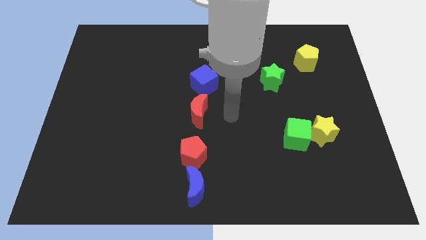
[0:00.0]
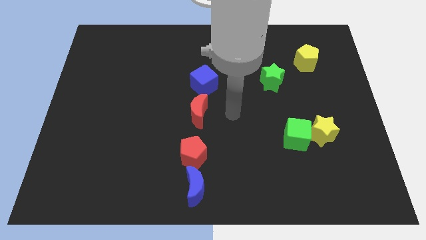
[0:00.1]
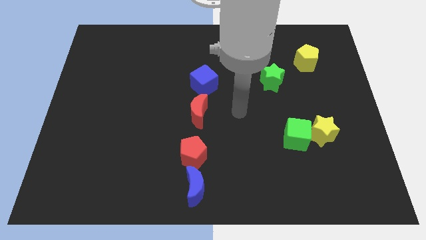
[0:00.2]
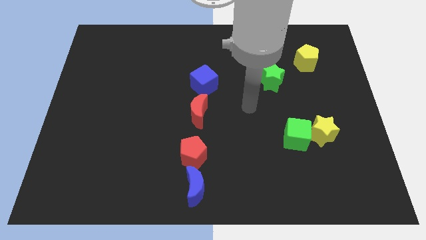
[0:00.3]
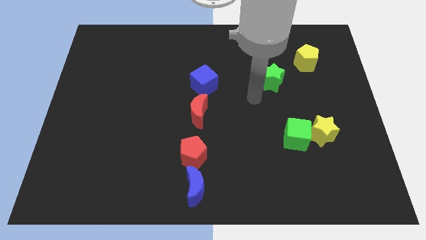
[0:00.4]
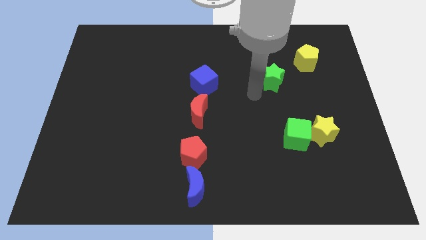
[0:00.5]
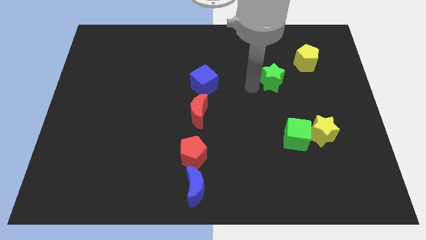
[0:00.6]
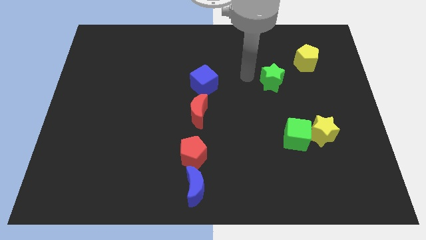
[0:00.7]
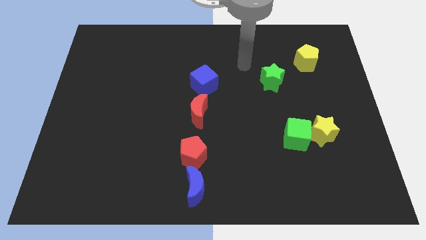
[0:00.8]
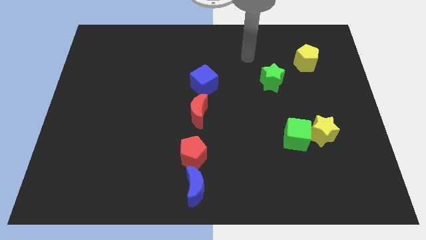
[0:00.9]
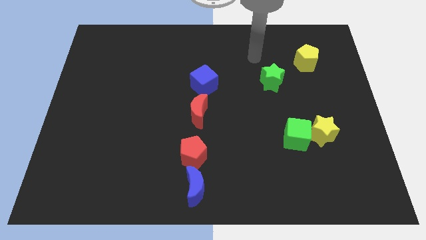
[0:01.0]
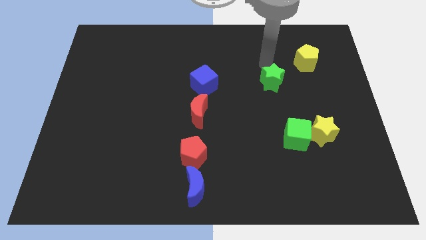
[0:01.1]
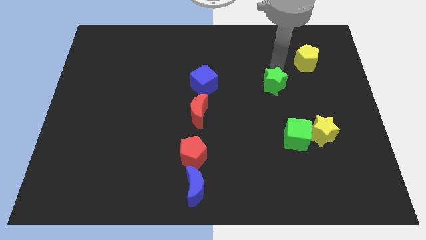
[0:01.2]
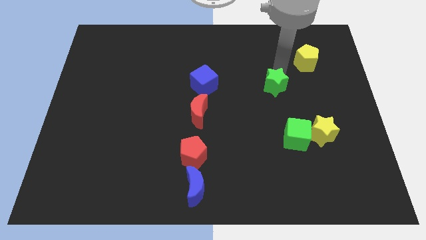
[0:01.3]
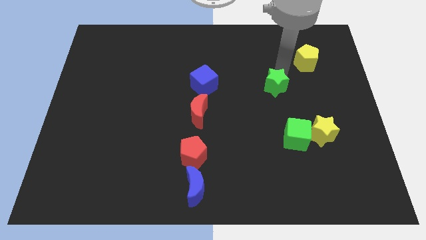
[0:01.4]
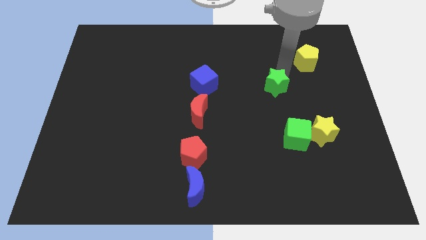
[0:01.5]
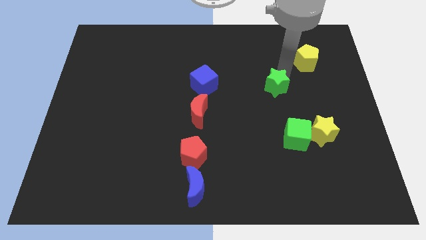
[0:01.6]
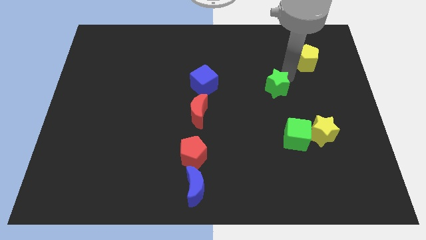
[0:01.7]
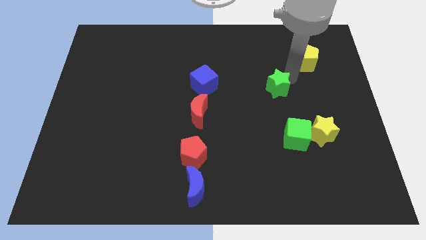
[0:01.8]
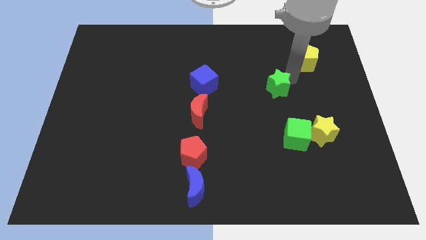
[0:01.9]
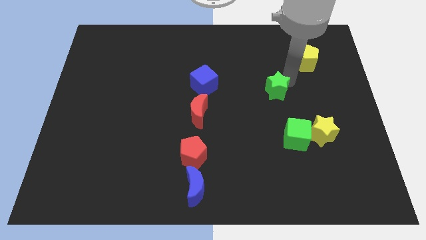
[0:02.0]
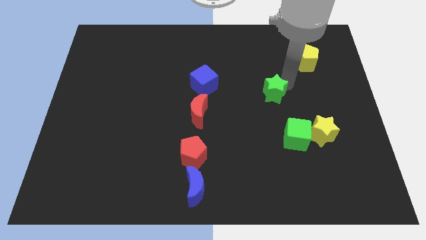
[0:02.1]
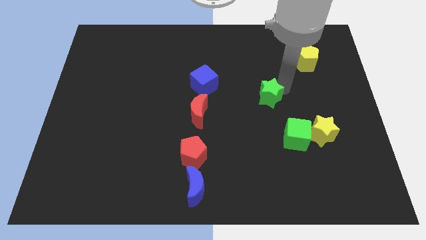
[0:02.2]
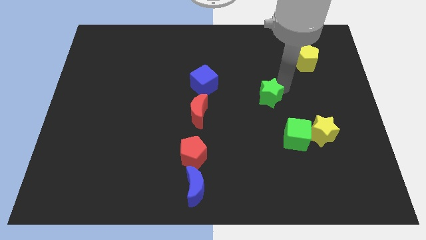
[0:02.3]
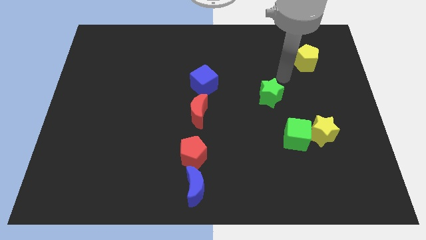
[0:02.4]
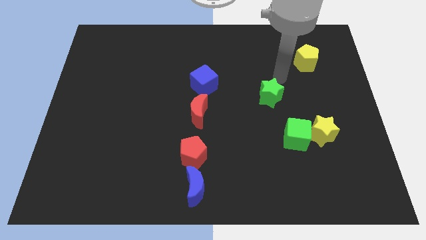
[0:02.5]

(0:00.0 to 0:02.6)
push the green star diagonally to red pentagon

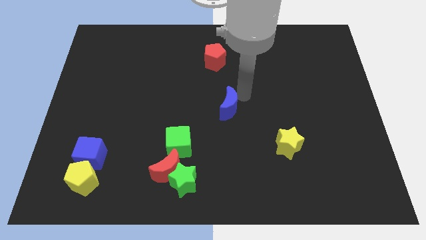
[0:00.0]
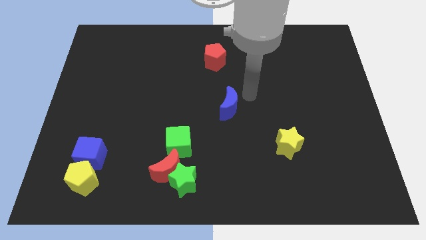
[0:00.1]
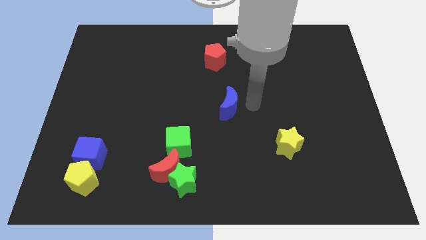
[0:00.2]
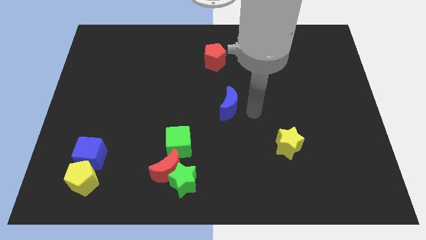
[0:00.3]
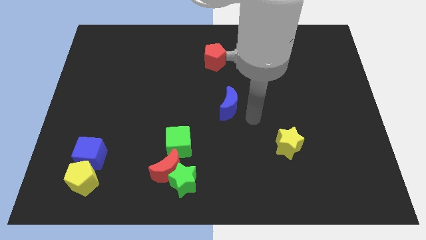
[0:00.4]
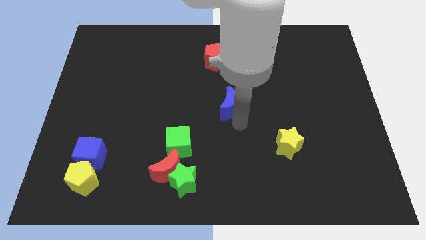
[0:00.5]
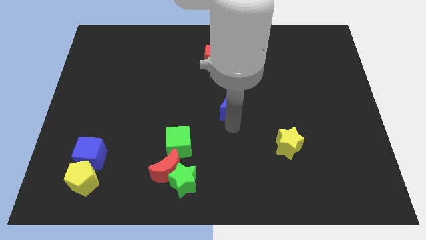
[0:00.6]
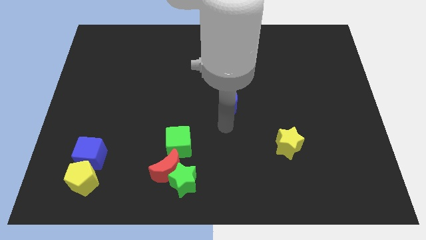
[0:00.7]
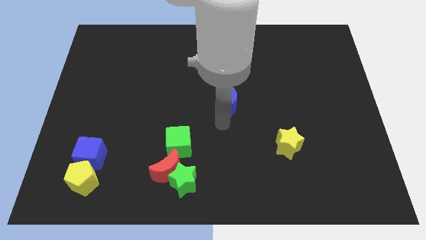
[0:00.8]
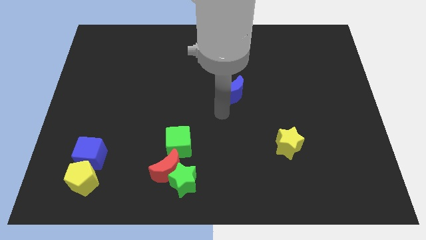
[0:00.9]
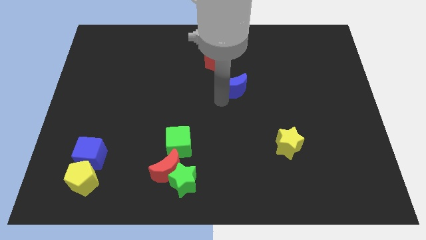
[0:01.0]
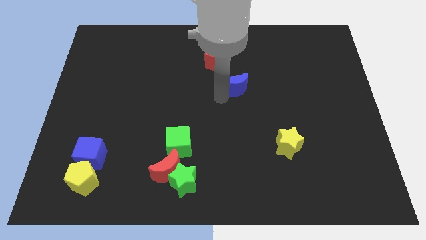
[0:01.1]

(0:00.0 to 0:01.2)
push blue crescent towards red pentagon

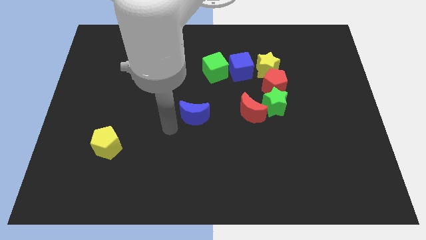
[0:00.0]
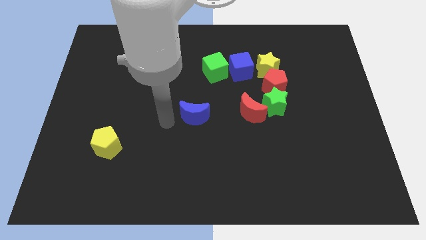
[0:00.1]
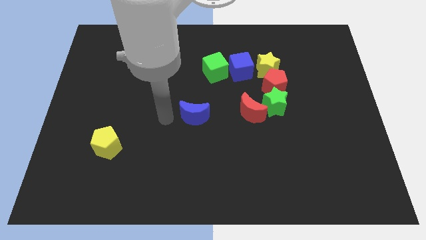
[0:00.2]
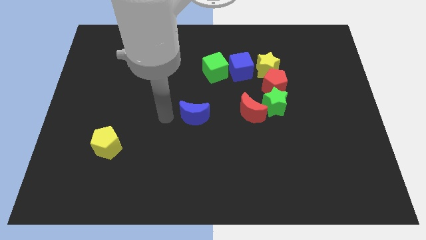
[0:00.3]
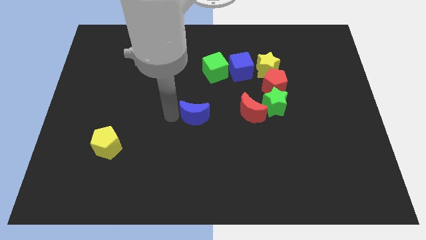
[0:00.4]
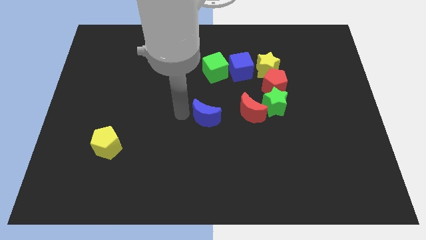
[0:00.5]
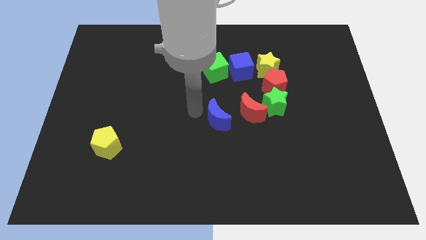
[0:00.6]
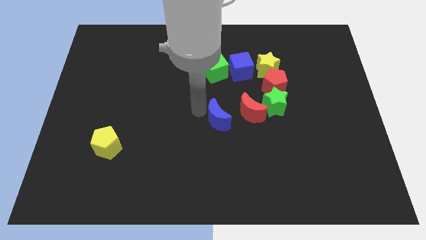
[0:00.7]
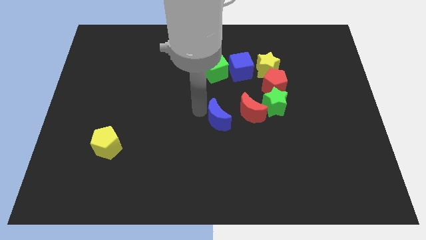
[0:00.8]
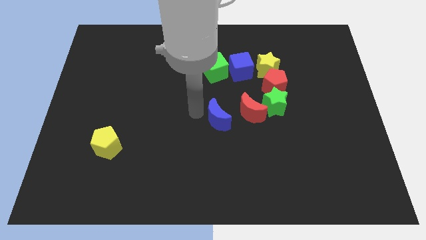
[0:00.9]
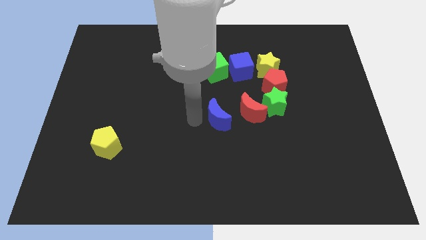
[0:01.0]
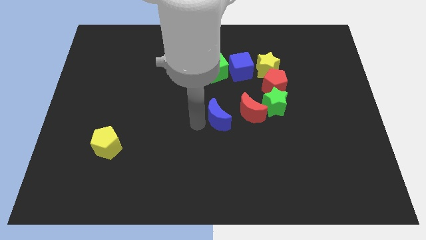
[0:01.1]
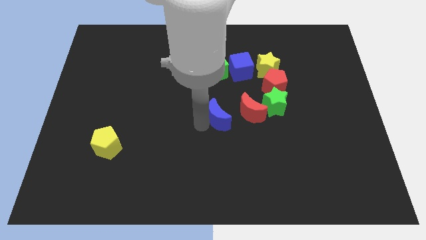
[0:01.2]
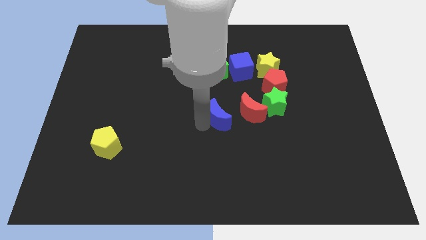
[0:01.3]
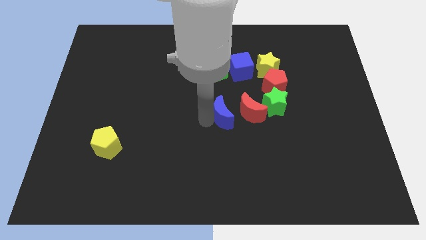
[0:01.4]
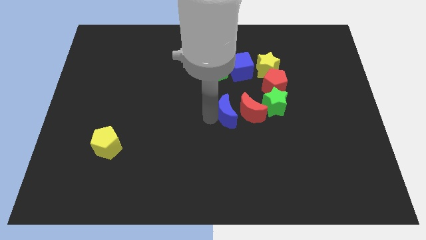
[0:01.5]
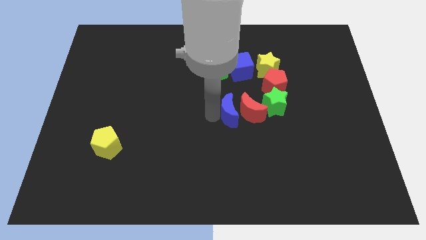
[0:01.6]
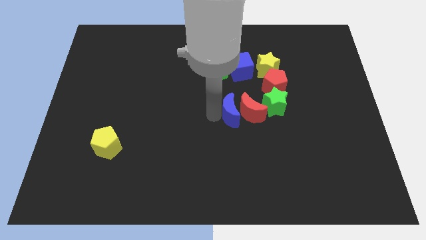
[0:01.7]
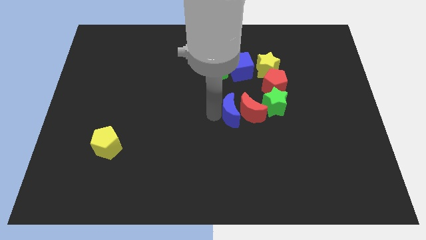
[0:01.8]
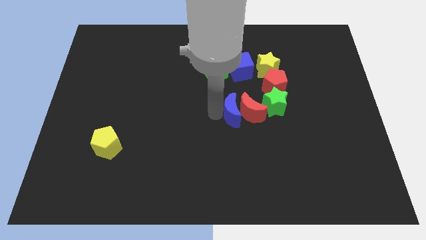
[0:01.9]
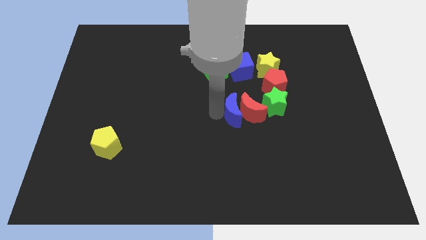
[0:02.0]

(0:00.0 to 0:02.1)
push the blue crescent near to the left side of the red moon

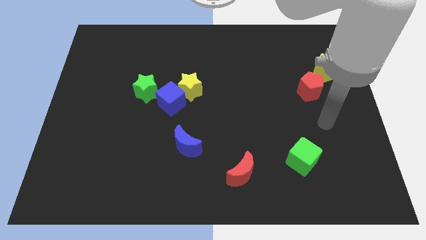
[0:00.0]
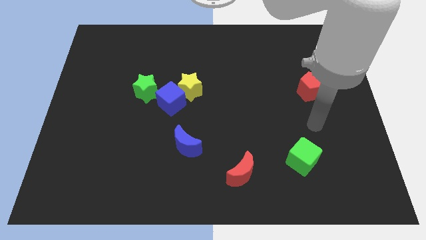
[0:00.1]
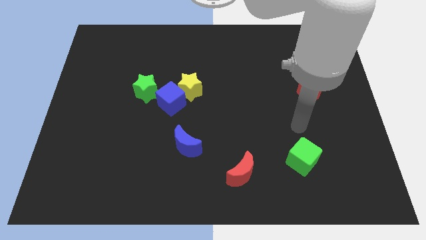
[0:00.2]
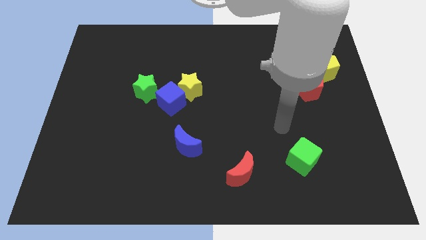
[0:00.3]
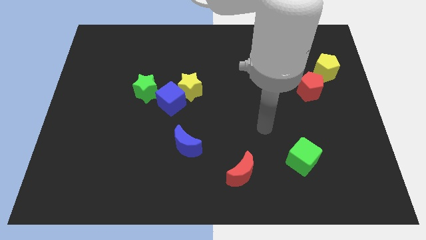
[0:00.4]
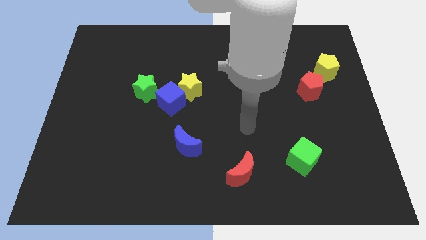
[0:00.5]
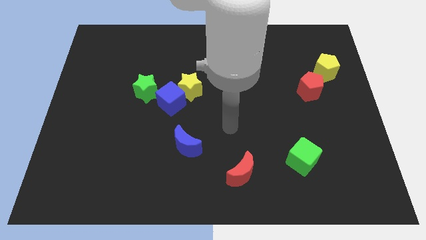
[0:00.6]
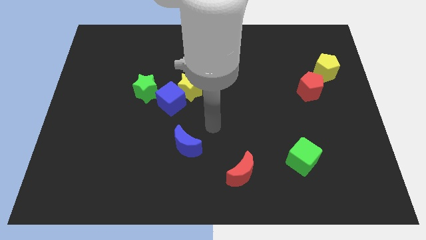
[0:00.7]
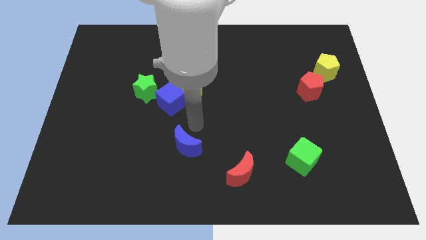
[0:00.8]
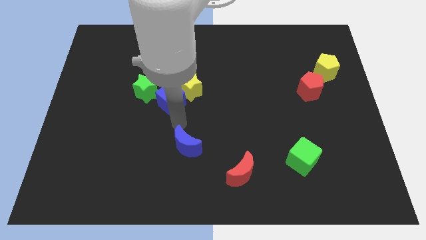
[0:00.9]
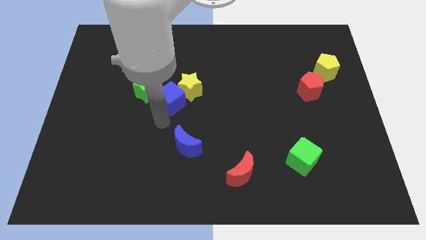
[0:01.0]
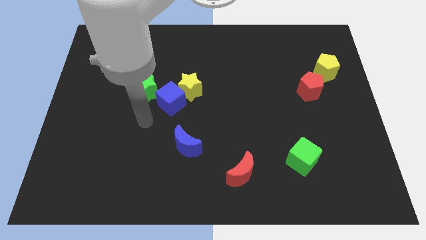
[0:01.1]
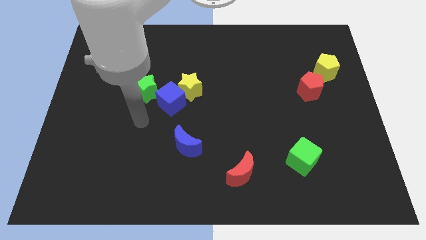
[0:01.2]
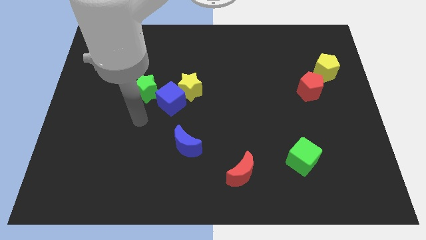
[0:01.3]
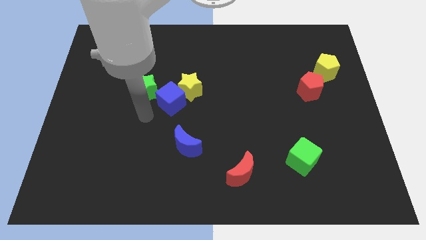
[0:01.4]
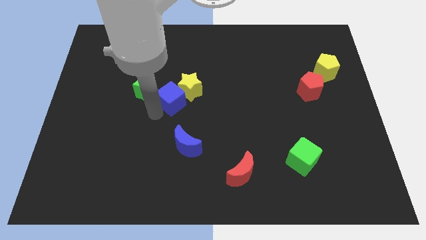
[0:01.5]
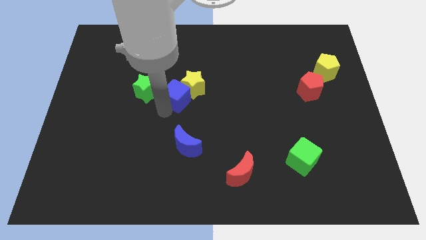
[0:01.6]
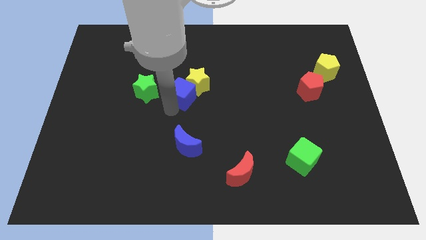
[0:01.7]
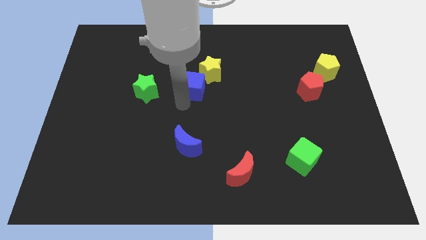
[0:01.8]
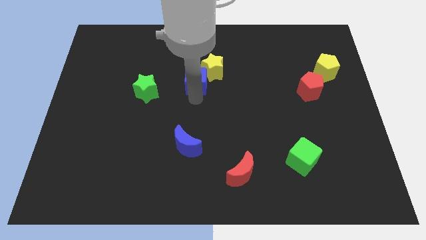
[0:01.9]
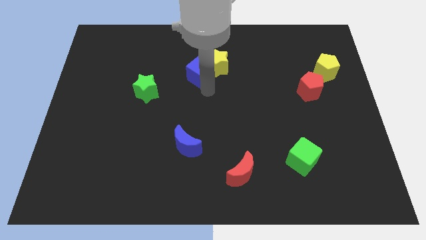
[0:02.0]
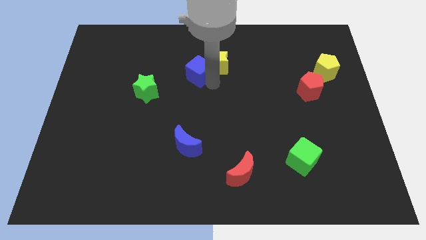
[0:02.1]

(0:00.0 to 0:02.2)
move both the blue cube and yellow star to the top center of the board

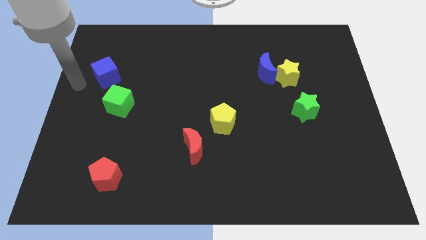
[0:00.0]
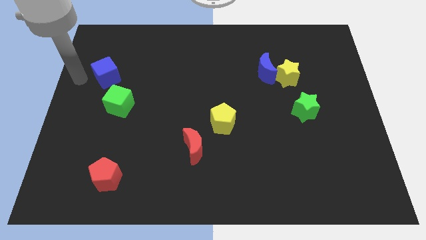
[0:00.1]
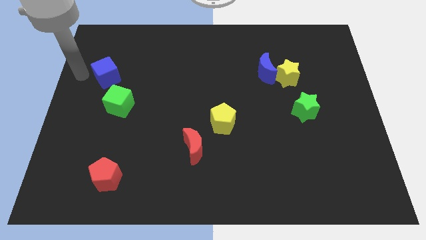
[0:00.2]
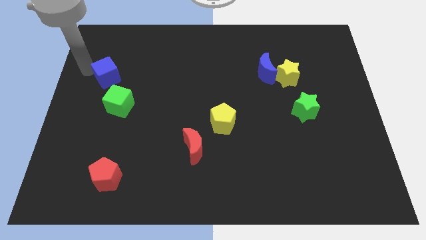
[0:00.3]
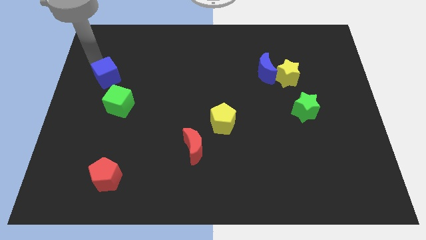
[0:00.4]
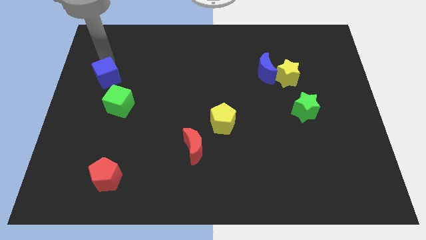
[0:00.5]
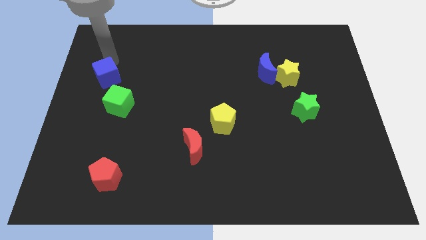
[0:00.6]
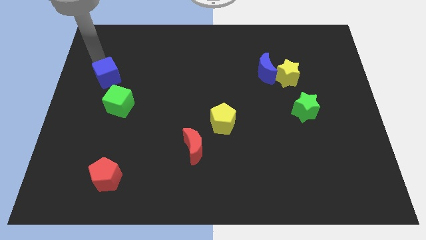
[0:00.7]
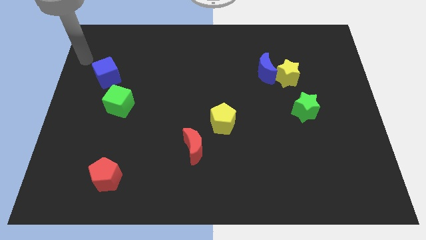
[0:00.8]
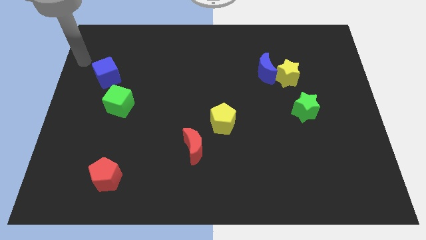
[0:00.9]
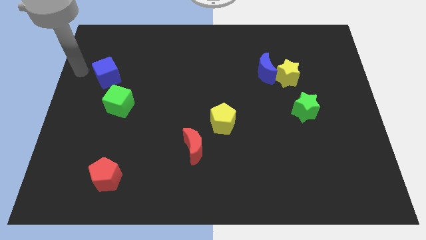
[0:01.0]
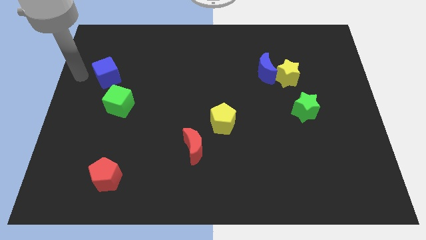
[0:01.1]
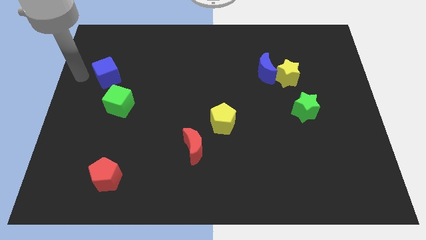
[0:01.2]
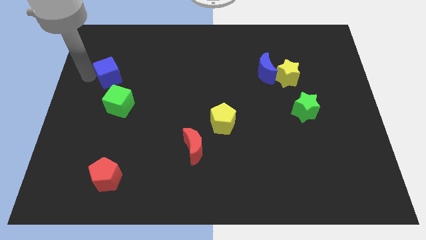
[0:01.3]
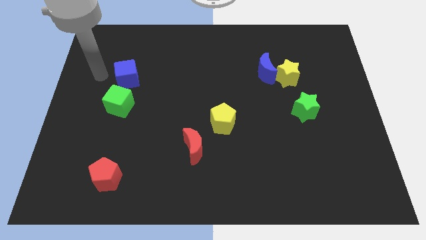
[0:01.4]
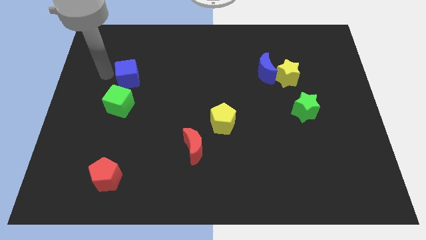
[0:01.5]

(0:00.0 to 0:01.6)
place blue cube to the top of green cube
